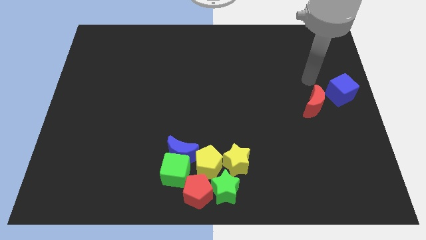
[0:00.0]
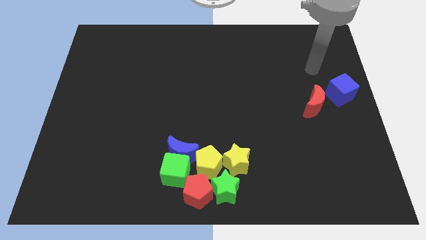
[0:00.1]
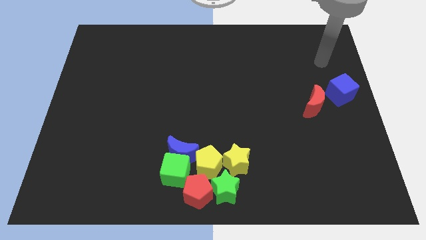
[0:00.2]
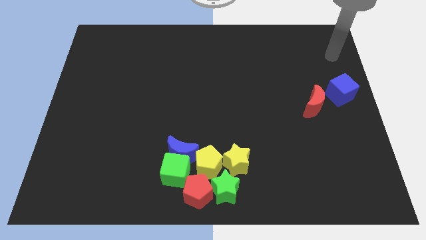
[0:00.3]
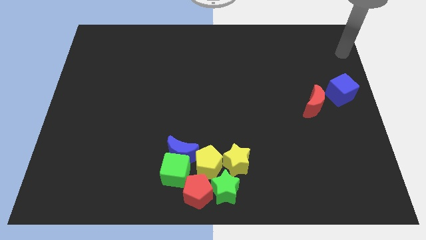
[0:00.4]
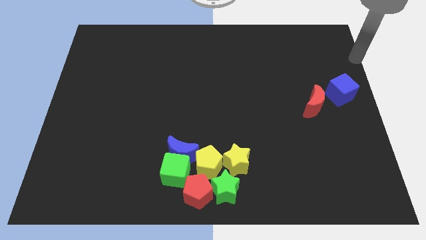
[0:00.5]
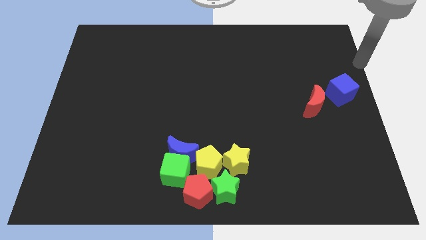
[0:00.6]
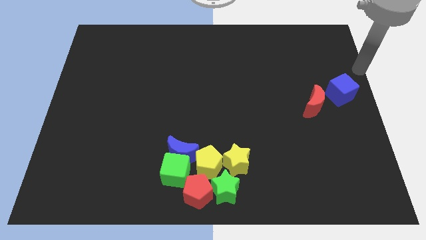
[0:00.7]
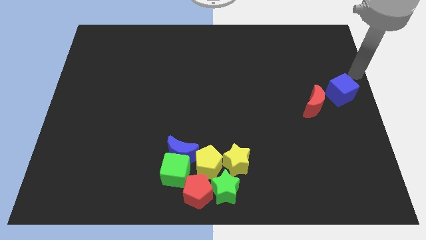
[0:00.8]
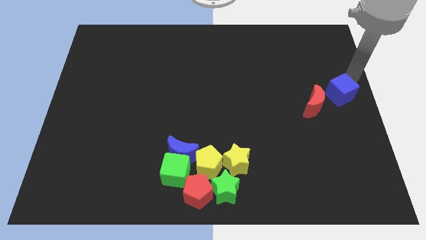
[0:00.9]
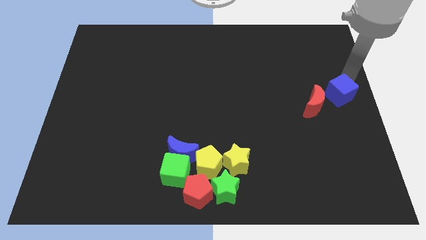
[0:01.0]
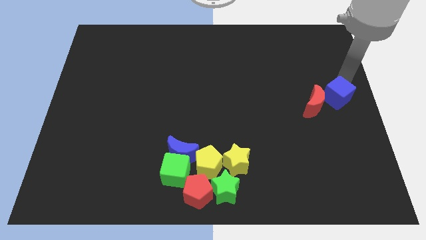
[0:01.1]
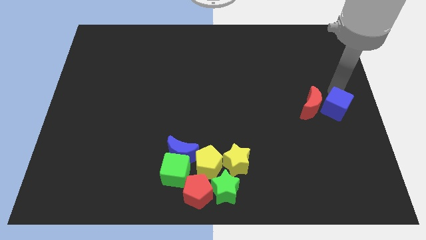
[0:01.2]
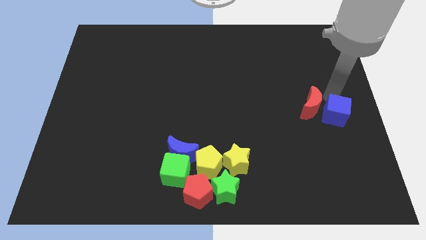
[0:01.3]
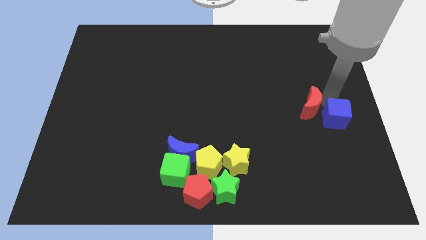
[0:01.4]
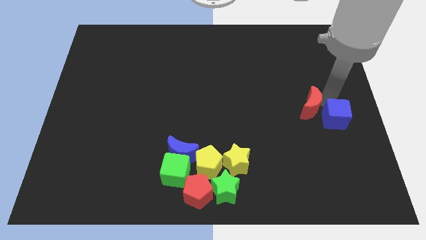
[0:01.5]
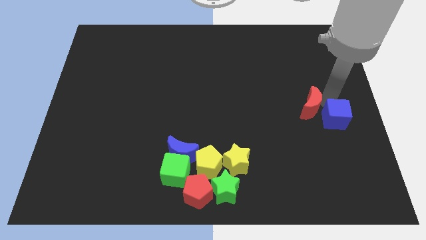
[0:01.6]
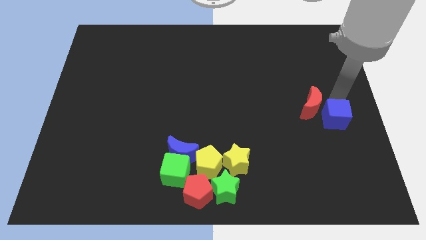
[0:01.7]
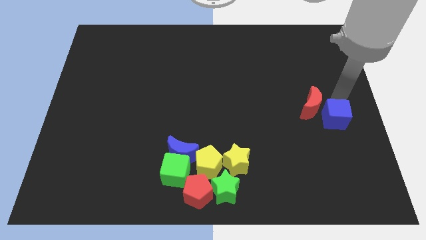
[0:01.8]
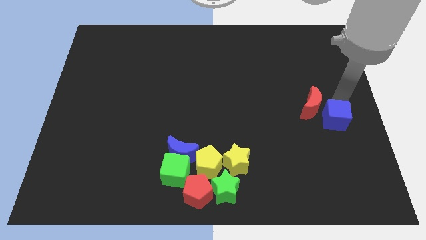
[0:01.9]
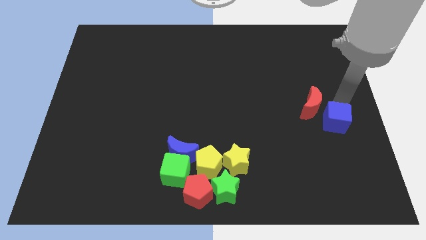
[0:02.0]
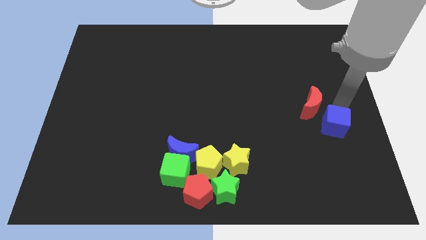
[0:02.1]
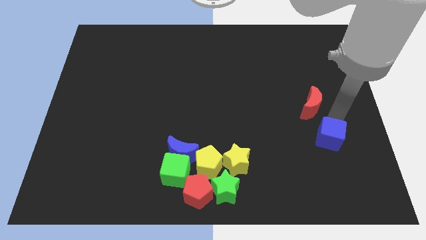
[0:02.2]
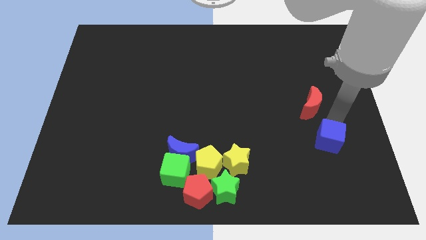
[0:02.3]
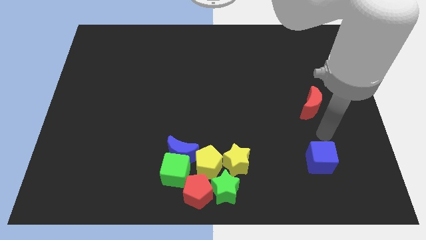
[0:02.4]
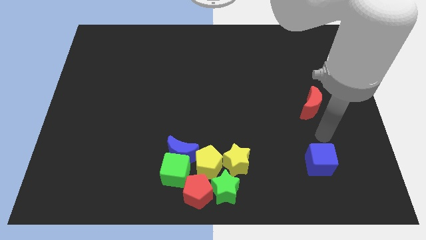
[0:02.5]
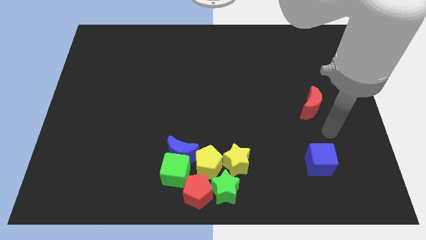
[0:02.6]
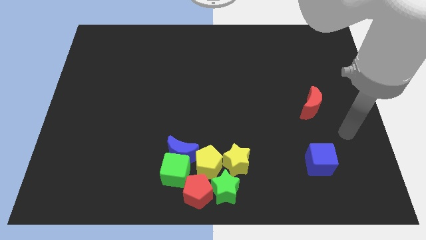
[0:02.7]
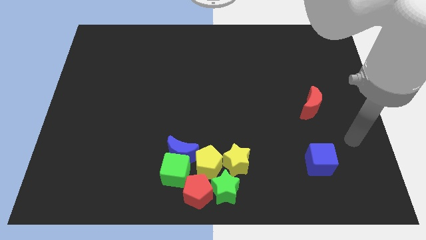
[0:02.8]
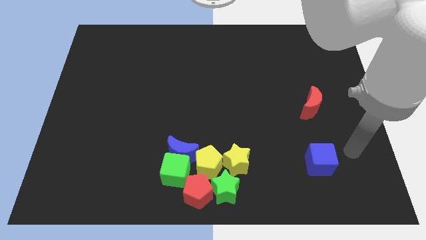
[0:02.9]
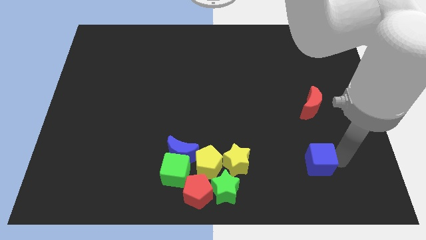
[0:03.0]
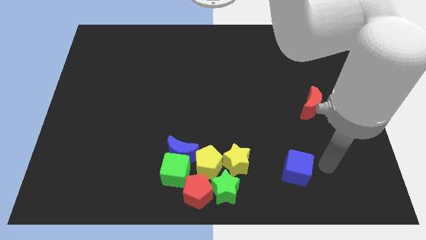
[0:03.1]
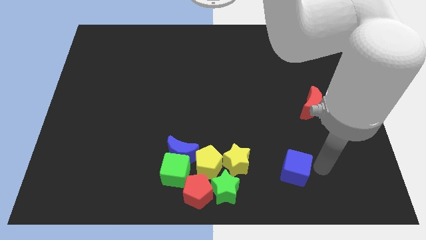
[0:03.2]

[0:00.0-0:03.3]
move the blue cube to the bottom center

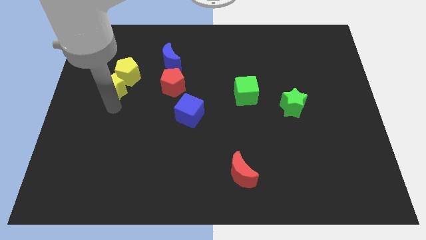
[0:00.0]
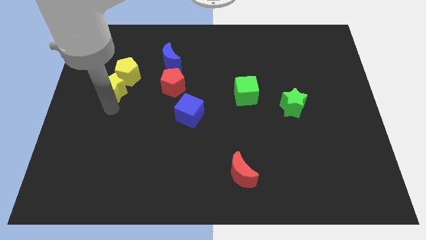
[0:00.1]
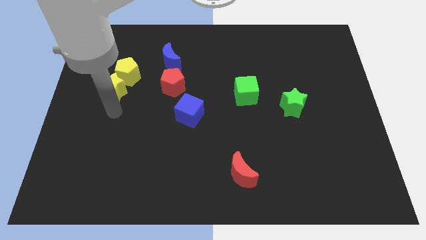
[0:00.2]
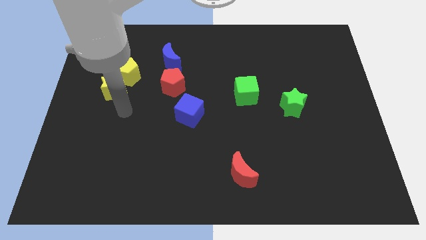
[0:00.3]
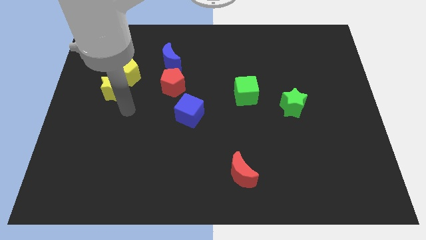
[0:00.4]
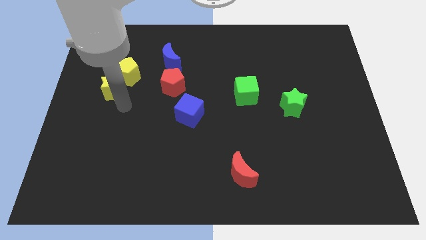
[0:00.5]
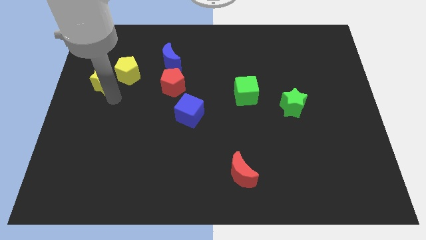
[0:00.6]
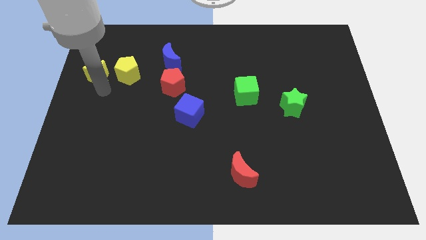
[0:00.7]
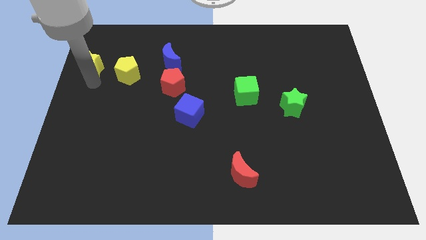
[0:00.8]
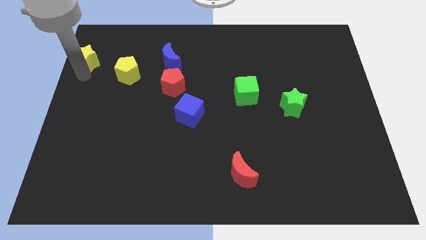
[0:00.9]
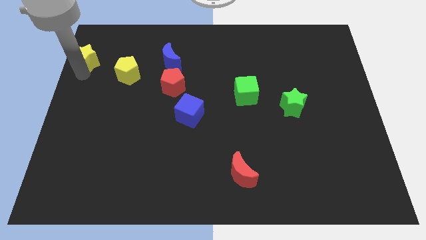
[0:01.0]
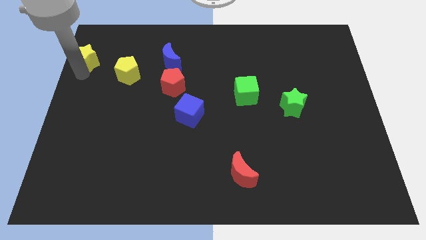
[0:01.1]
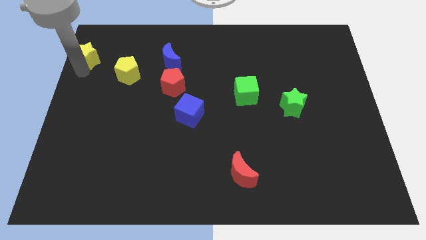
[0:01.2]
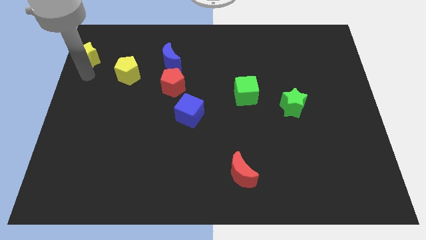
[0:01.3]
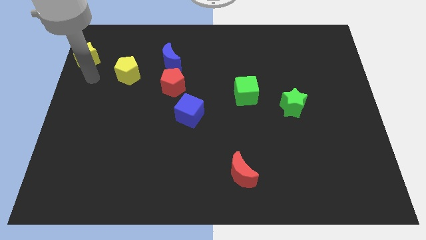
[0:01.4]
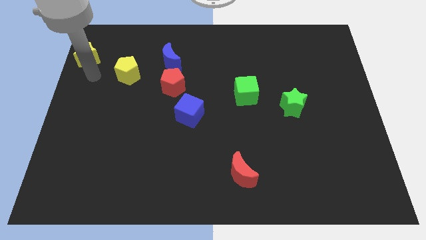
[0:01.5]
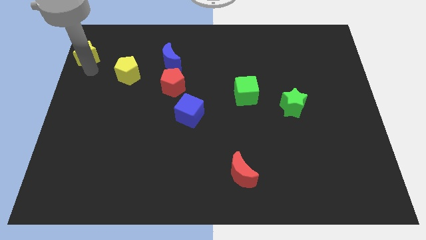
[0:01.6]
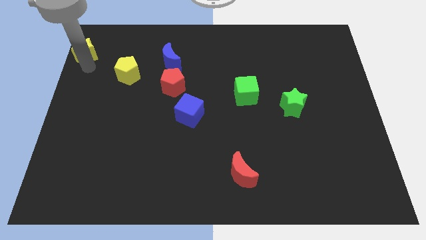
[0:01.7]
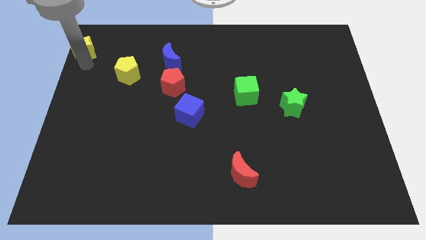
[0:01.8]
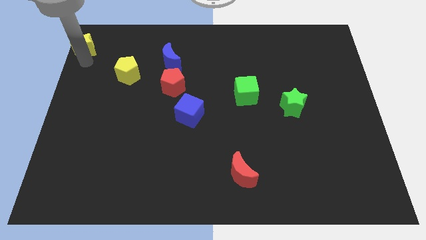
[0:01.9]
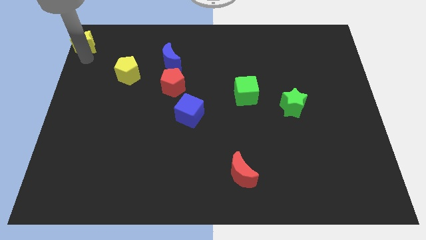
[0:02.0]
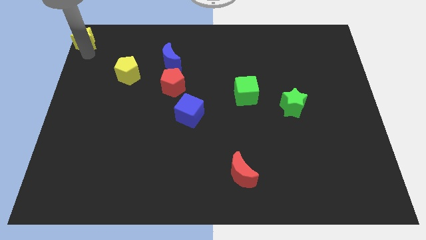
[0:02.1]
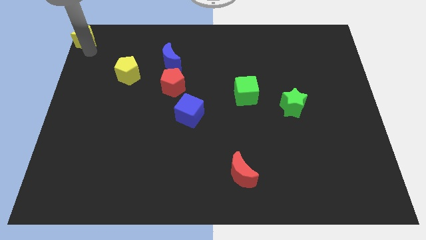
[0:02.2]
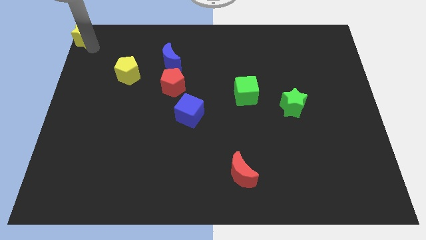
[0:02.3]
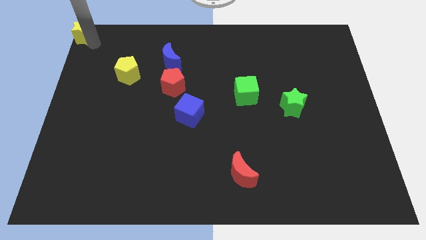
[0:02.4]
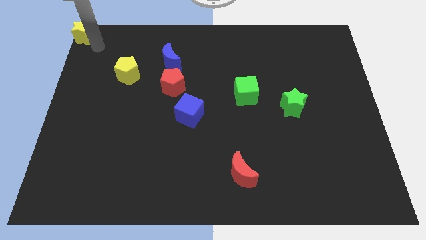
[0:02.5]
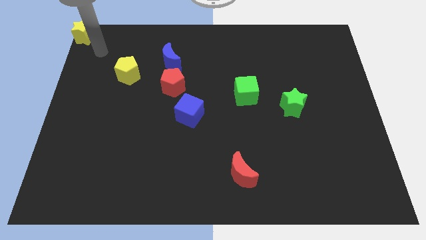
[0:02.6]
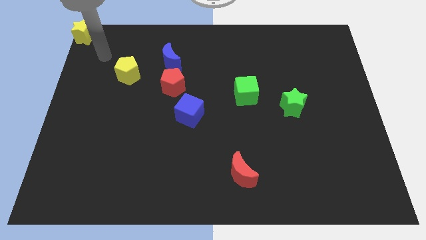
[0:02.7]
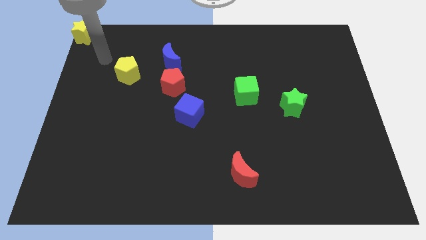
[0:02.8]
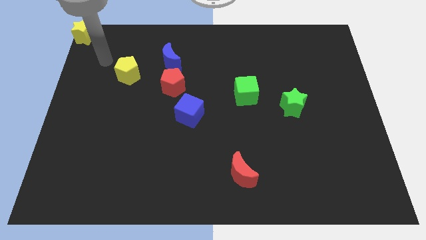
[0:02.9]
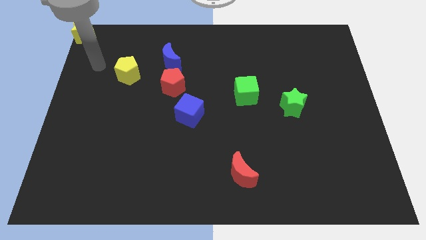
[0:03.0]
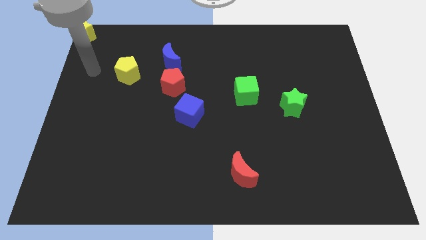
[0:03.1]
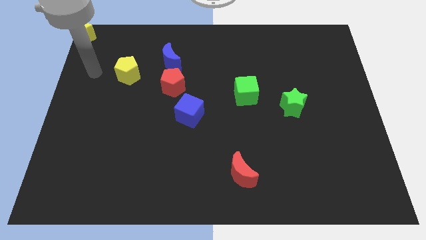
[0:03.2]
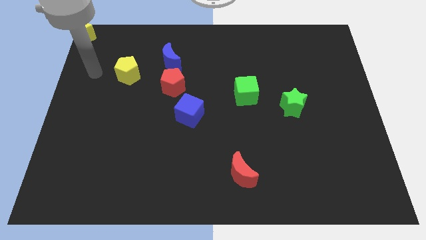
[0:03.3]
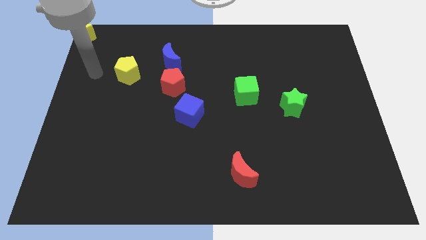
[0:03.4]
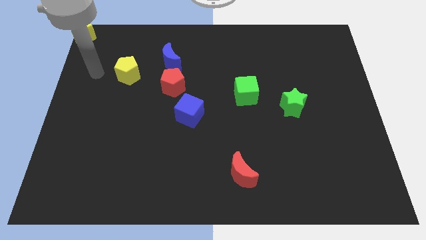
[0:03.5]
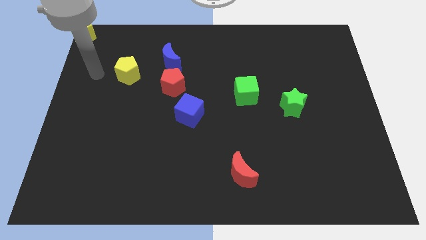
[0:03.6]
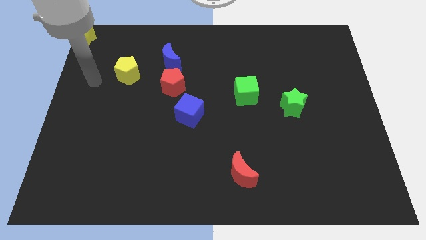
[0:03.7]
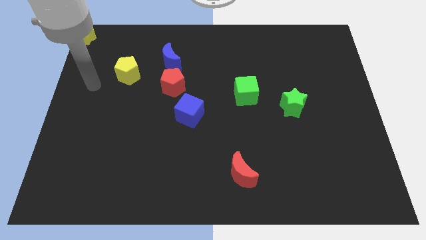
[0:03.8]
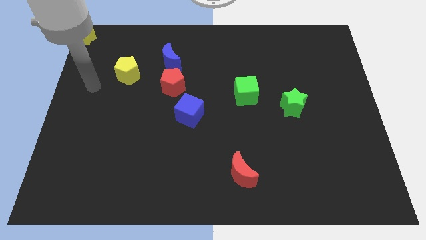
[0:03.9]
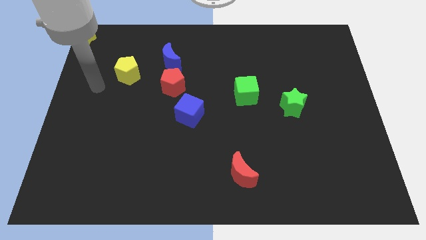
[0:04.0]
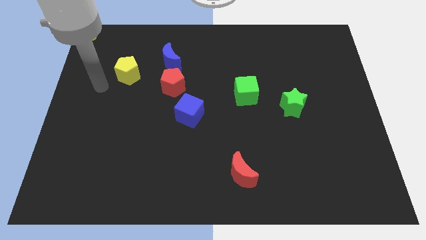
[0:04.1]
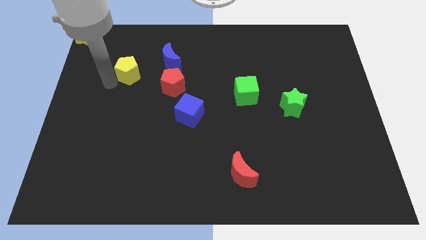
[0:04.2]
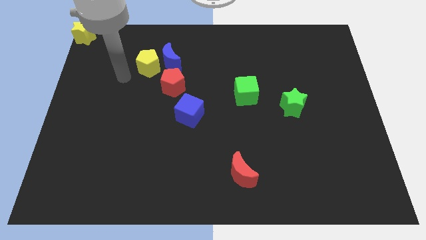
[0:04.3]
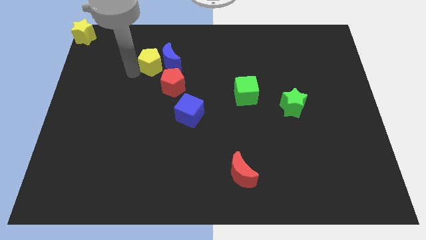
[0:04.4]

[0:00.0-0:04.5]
move the yellow star to the top left

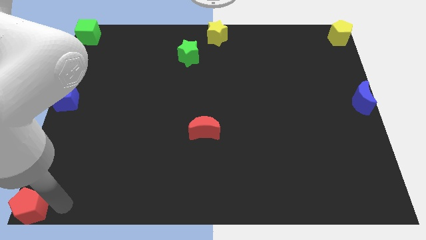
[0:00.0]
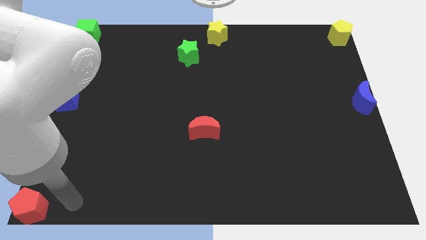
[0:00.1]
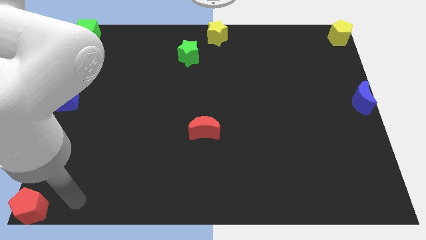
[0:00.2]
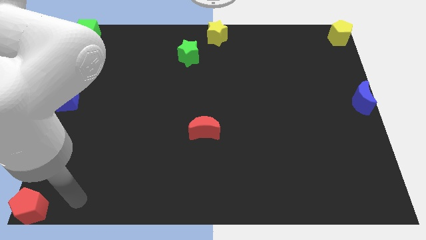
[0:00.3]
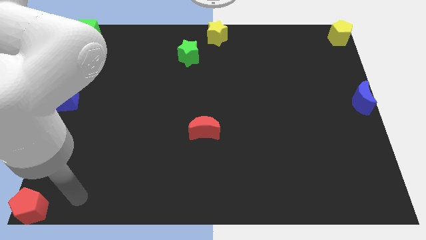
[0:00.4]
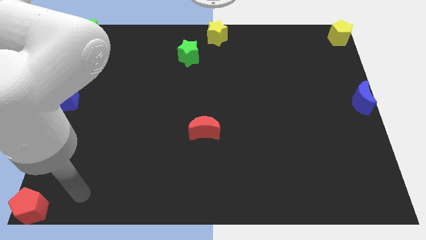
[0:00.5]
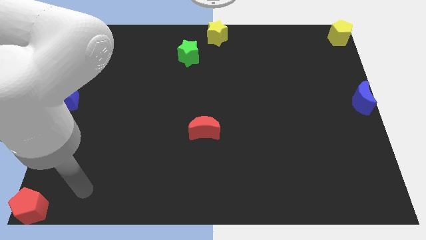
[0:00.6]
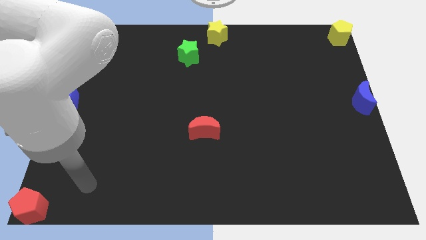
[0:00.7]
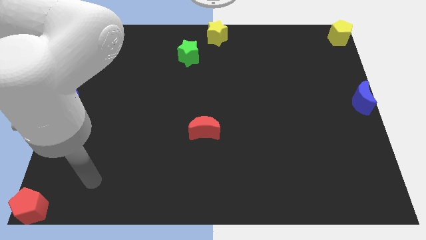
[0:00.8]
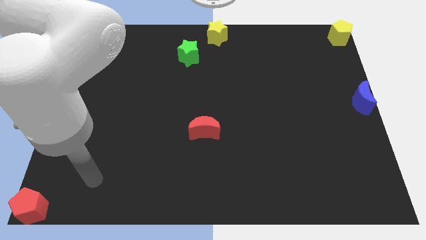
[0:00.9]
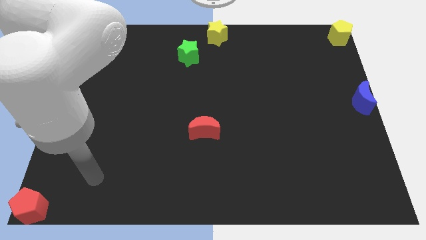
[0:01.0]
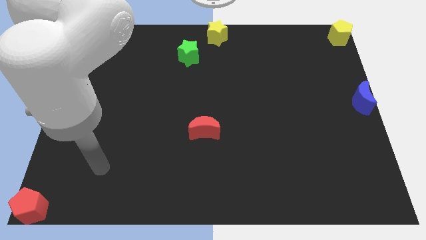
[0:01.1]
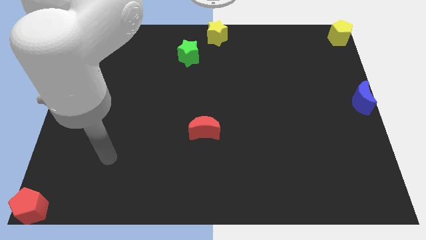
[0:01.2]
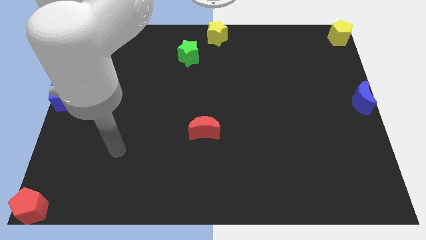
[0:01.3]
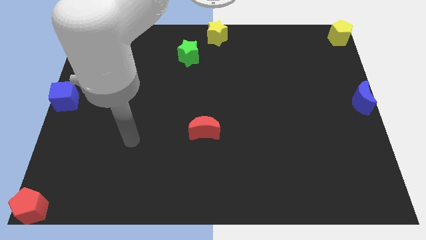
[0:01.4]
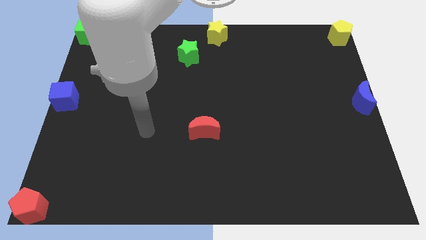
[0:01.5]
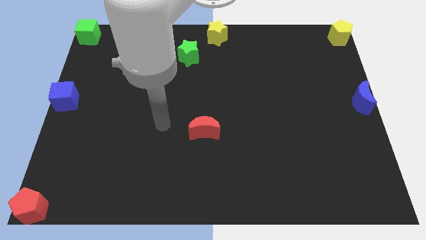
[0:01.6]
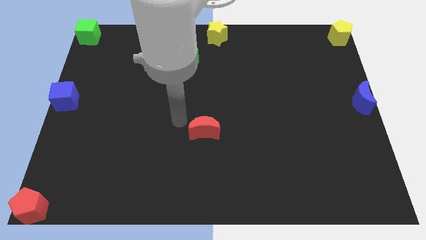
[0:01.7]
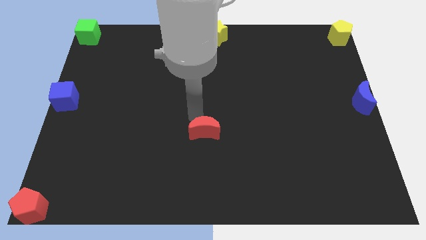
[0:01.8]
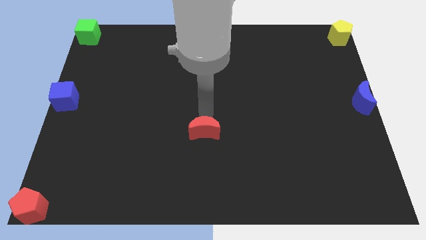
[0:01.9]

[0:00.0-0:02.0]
move the arm near the red moon
